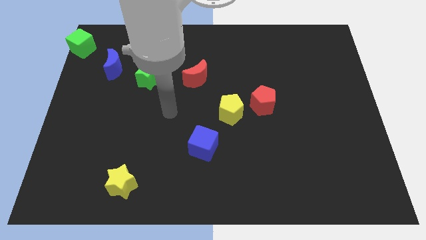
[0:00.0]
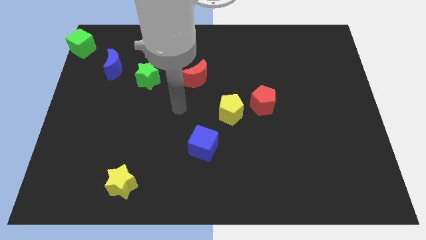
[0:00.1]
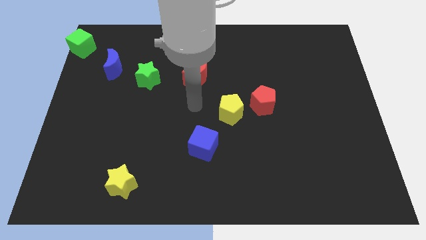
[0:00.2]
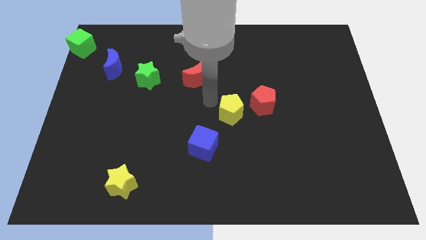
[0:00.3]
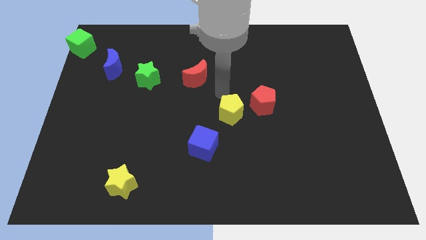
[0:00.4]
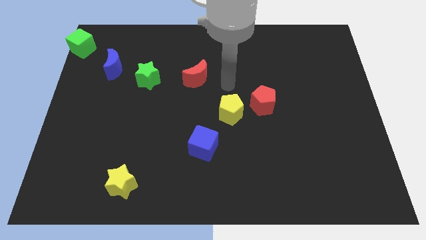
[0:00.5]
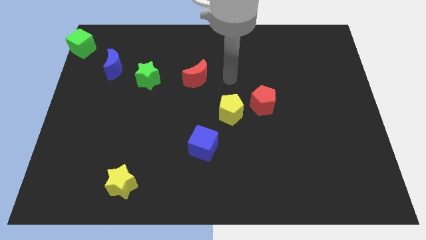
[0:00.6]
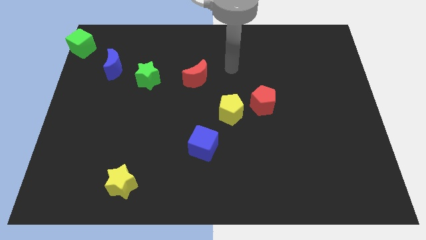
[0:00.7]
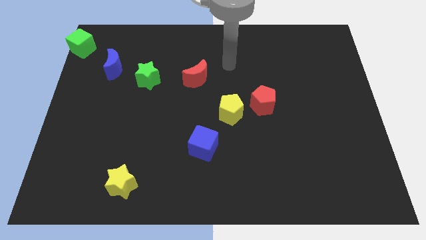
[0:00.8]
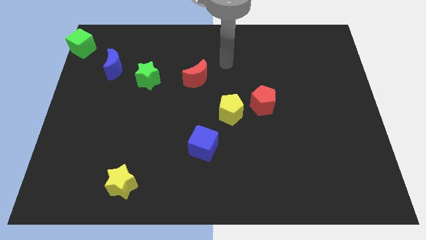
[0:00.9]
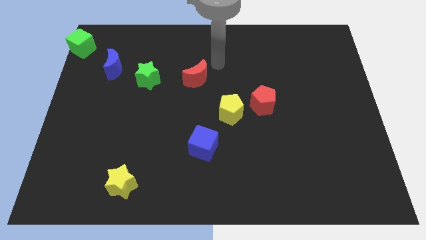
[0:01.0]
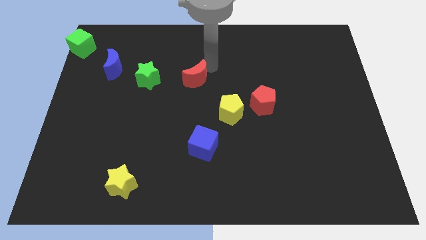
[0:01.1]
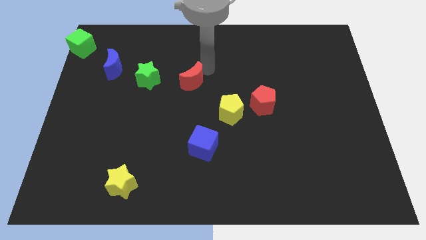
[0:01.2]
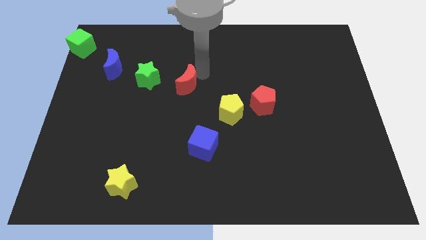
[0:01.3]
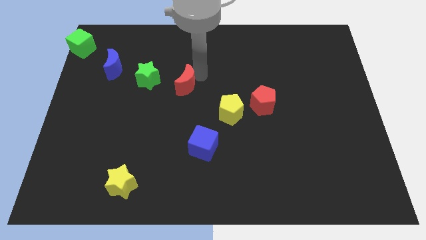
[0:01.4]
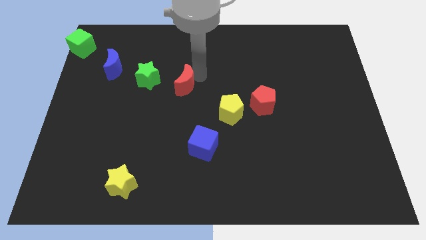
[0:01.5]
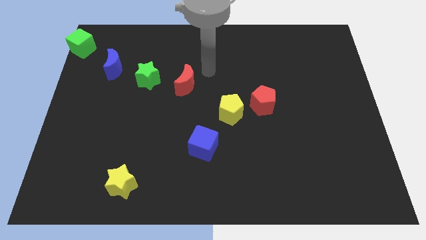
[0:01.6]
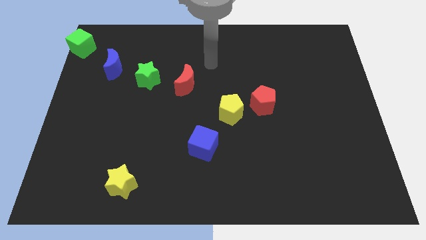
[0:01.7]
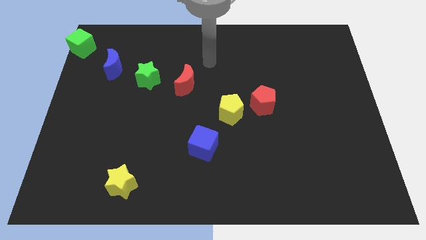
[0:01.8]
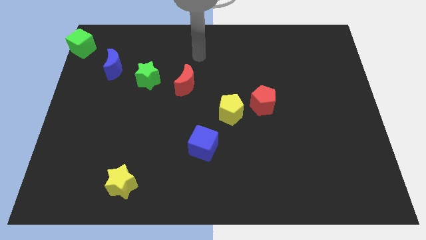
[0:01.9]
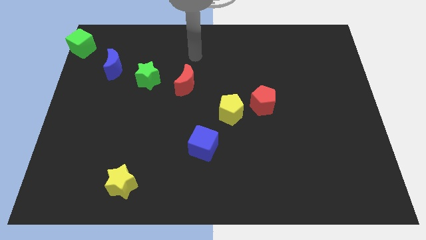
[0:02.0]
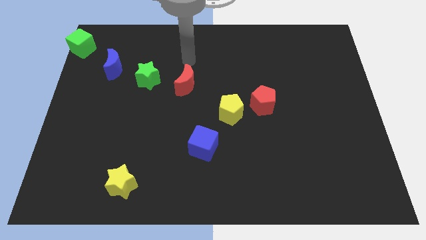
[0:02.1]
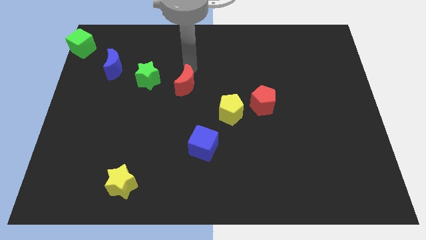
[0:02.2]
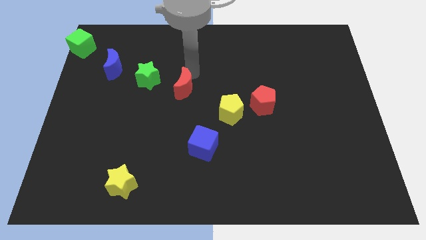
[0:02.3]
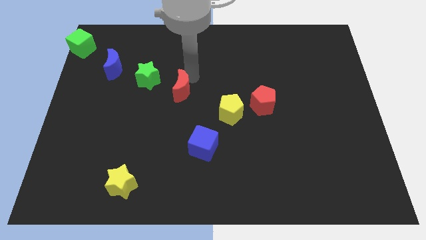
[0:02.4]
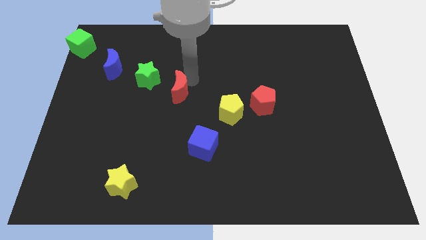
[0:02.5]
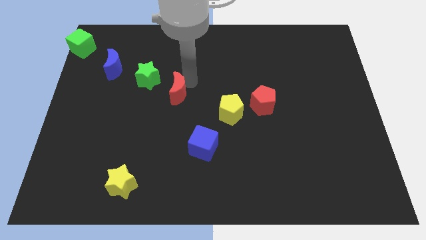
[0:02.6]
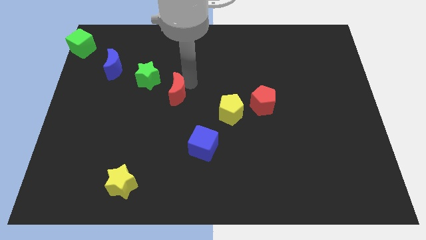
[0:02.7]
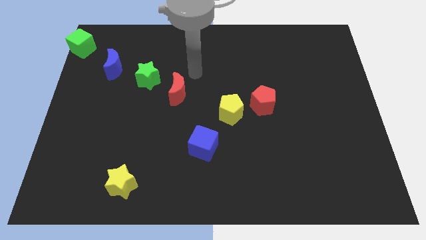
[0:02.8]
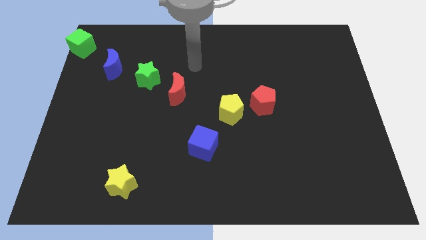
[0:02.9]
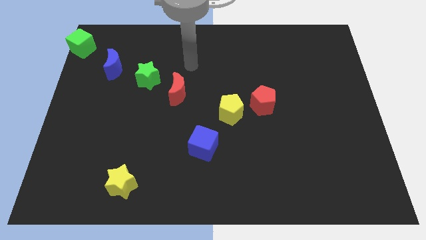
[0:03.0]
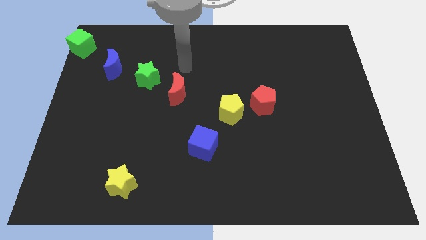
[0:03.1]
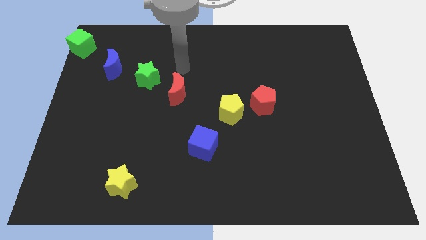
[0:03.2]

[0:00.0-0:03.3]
push the red moon below the green star

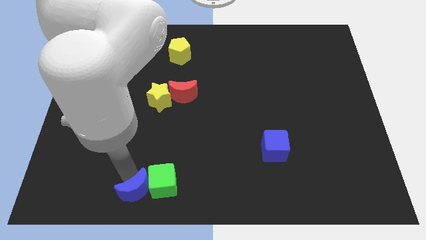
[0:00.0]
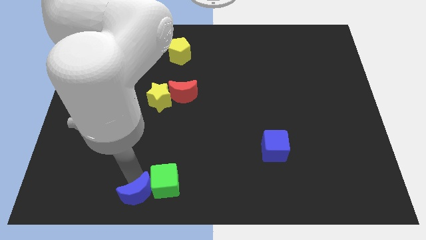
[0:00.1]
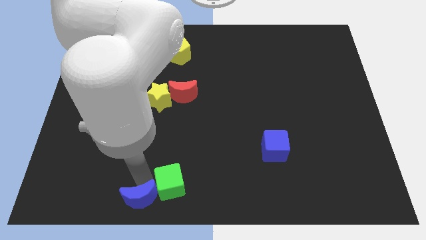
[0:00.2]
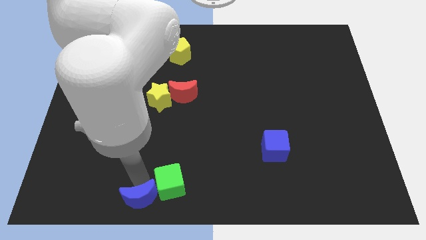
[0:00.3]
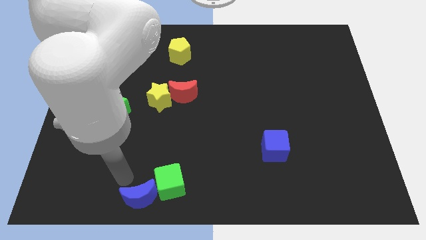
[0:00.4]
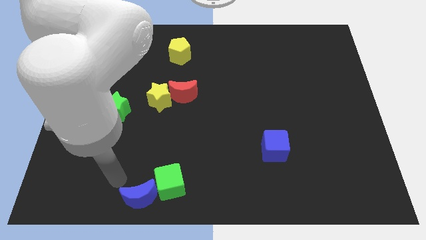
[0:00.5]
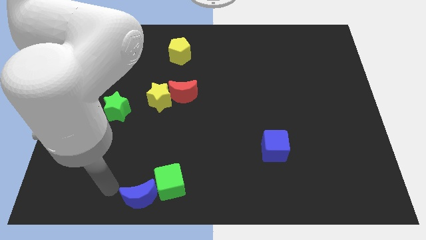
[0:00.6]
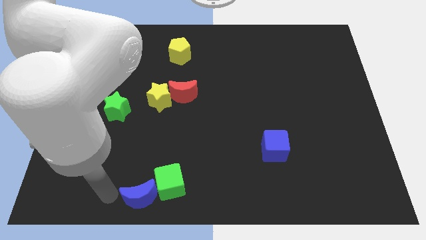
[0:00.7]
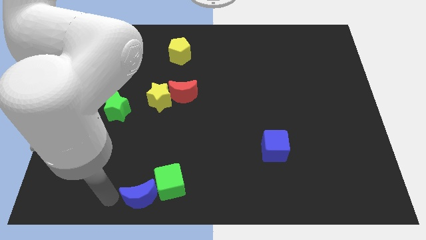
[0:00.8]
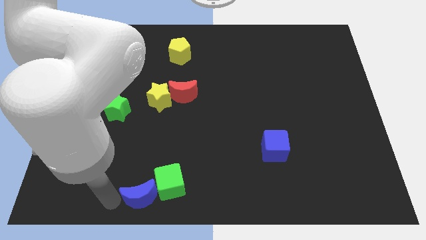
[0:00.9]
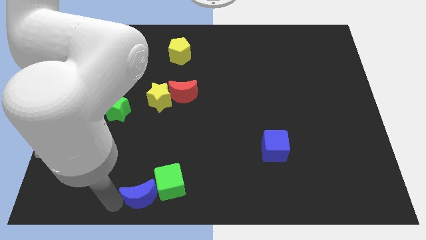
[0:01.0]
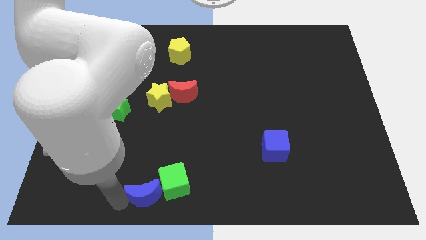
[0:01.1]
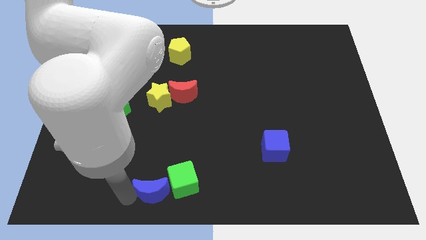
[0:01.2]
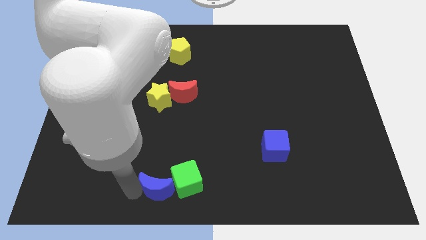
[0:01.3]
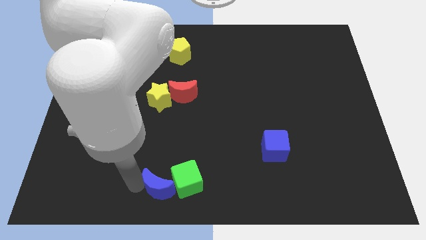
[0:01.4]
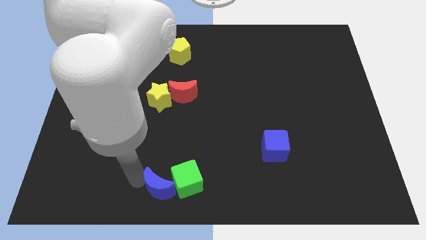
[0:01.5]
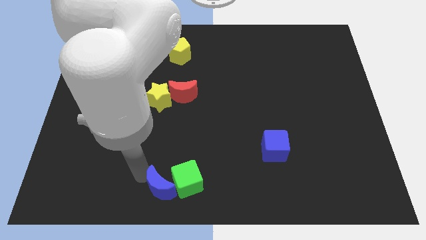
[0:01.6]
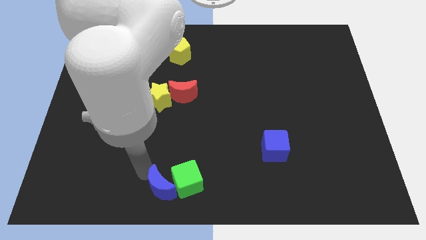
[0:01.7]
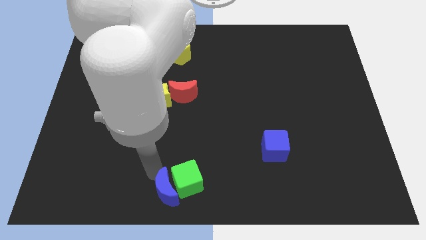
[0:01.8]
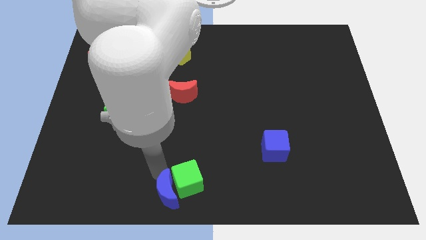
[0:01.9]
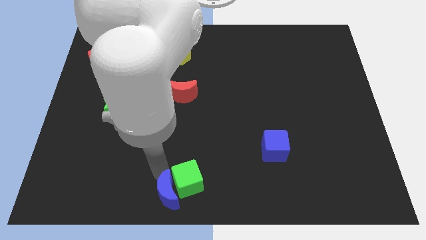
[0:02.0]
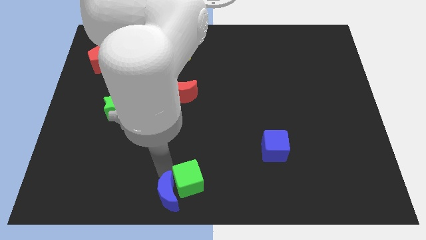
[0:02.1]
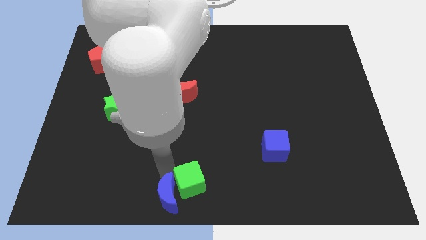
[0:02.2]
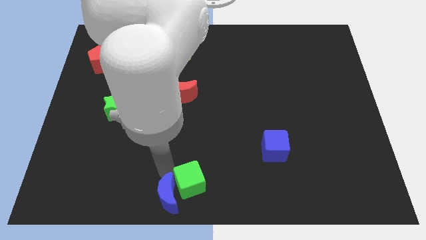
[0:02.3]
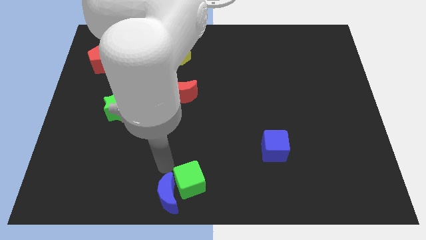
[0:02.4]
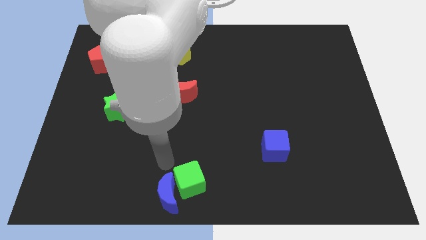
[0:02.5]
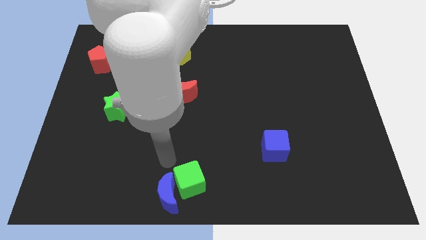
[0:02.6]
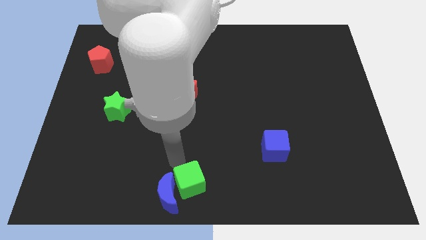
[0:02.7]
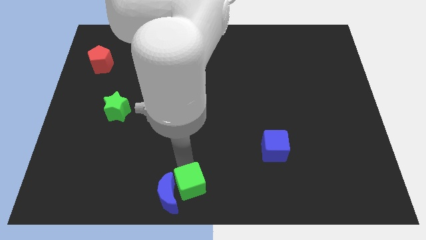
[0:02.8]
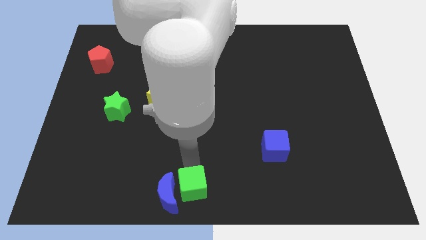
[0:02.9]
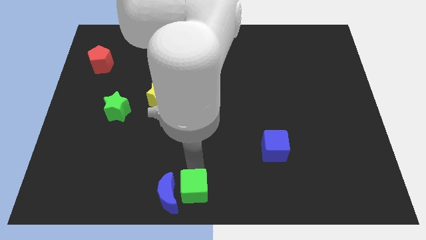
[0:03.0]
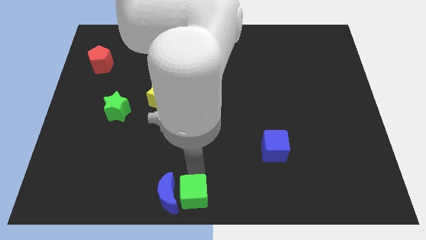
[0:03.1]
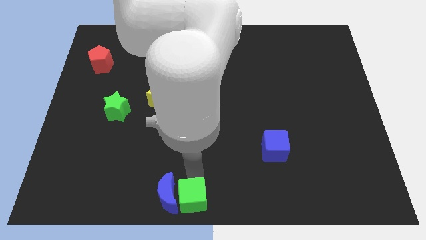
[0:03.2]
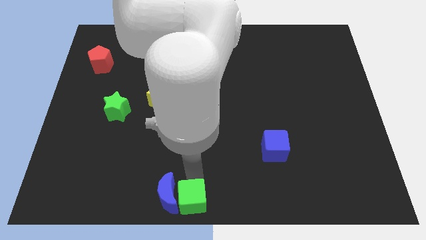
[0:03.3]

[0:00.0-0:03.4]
place the green cube to the right side of the blue moon

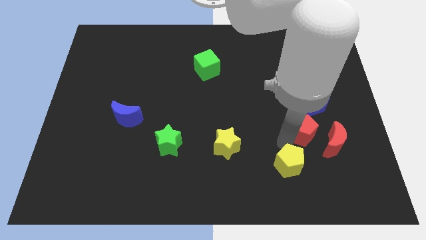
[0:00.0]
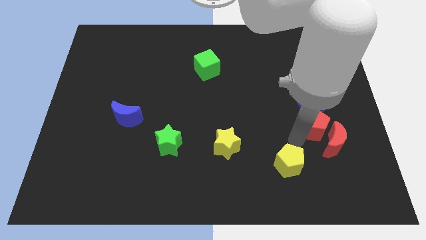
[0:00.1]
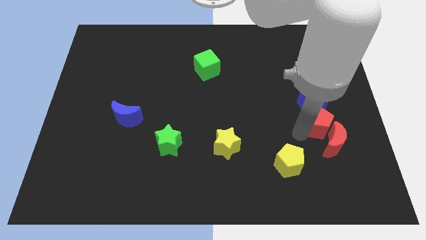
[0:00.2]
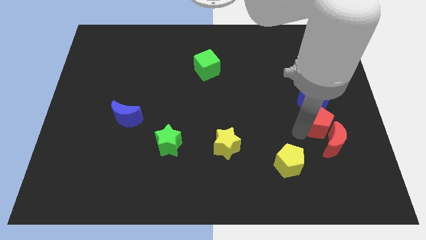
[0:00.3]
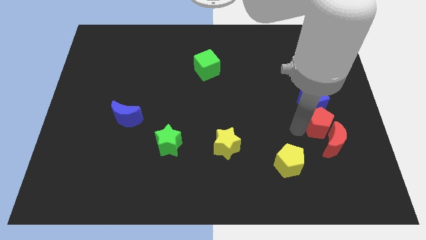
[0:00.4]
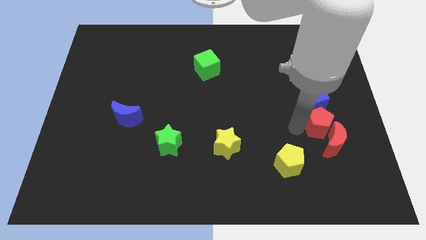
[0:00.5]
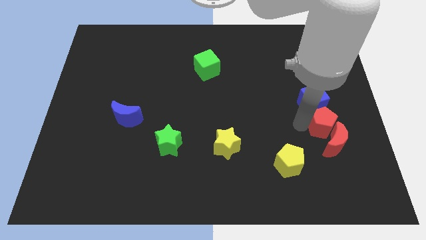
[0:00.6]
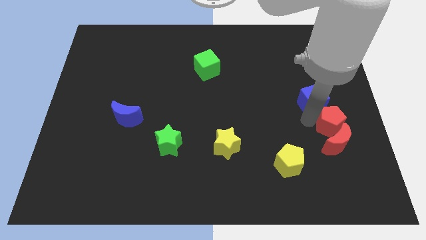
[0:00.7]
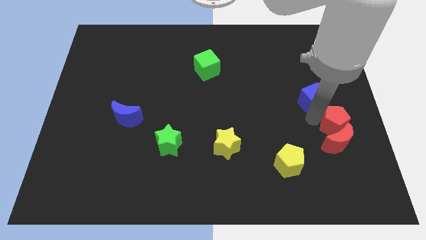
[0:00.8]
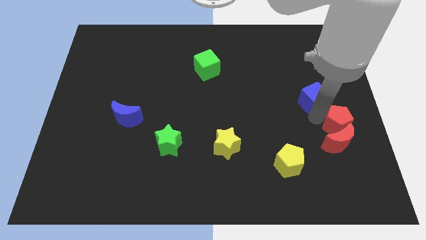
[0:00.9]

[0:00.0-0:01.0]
push red pentagon between blue cube and red moon

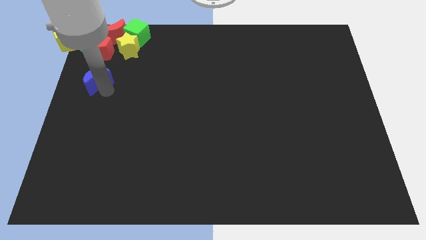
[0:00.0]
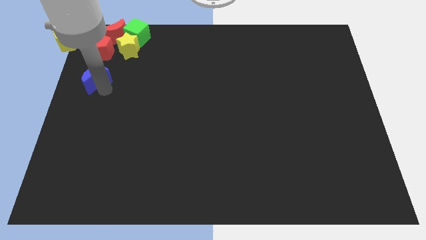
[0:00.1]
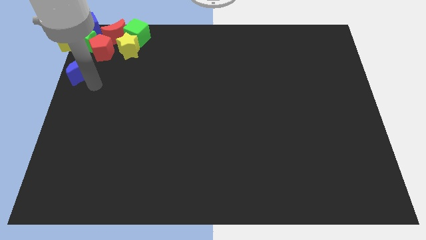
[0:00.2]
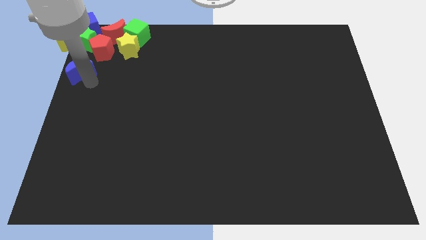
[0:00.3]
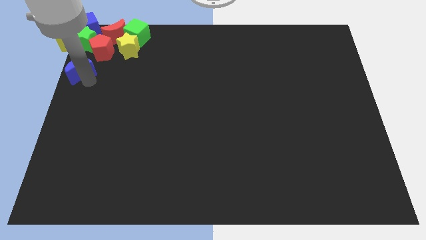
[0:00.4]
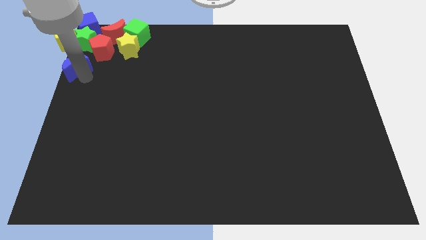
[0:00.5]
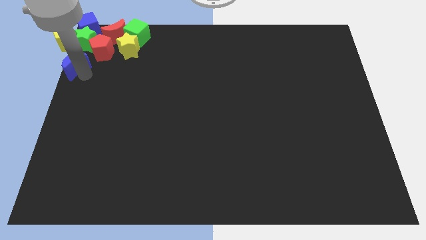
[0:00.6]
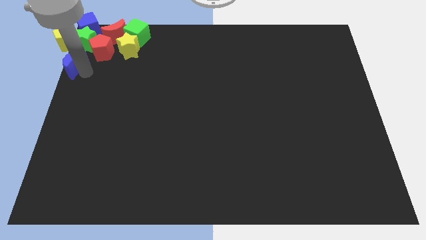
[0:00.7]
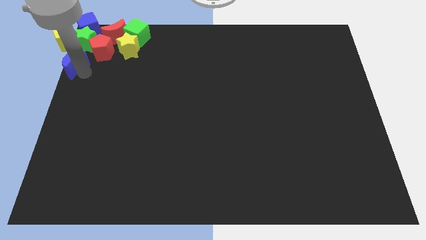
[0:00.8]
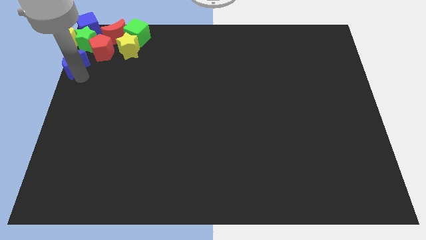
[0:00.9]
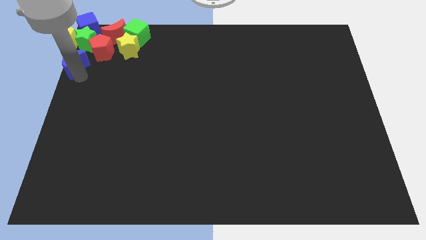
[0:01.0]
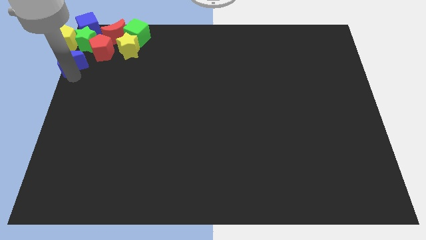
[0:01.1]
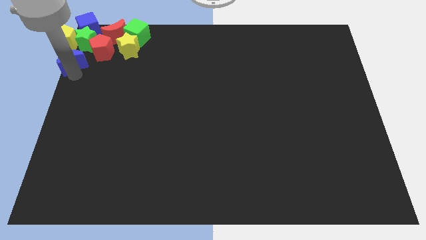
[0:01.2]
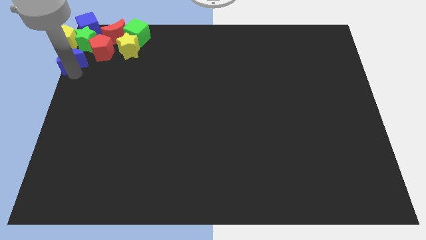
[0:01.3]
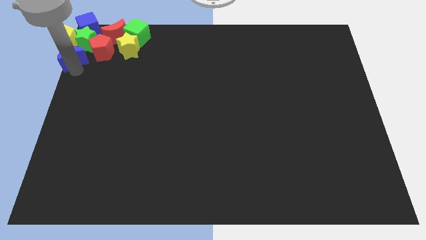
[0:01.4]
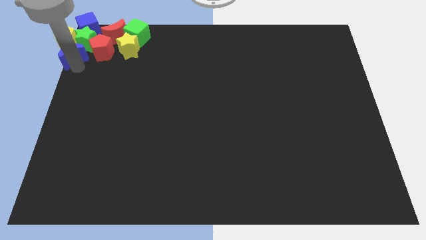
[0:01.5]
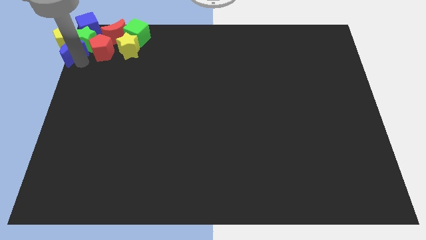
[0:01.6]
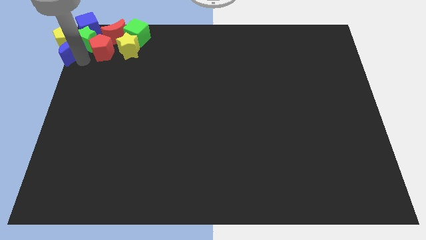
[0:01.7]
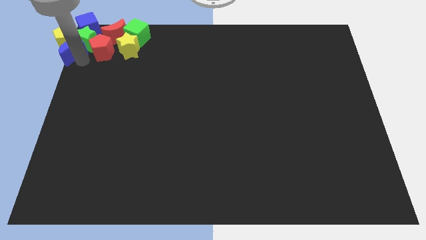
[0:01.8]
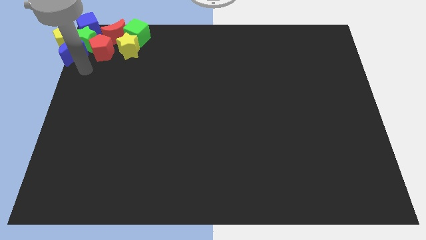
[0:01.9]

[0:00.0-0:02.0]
move the blue crescent to the top left of the board
